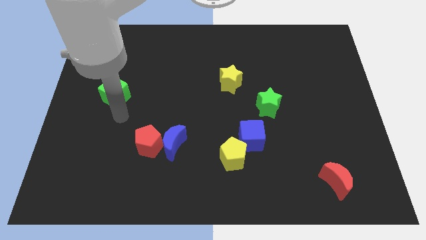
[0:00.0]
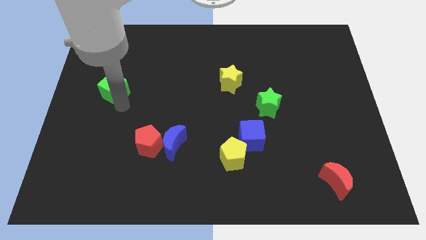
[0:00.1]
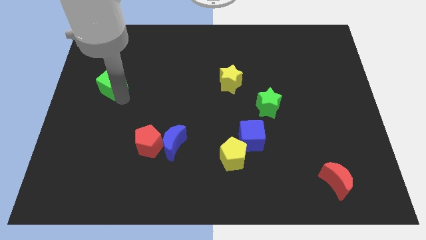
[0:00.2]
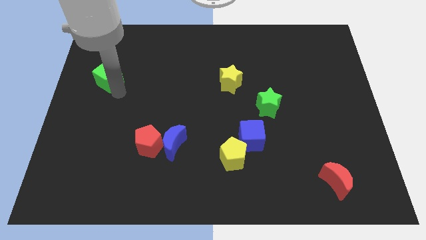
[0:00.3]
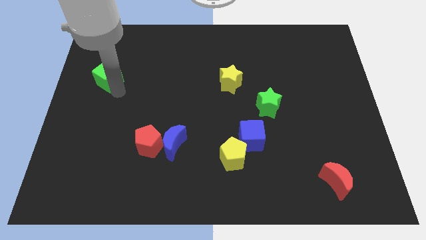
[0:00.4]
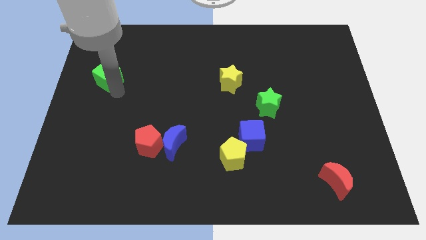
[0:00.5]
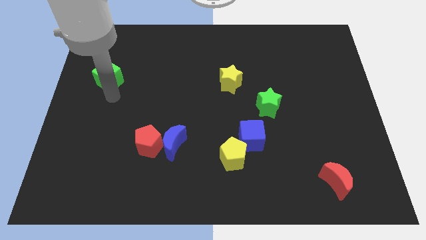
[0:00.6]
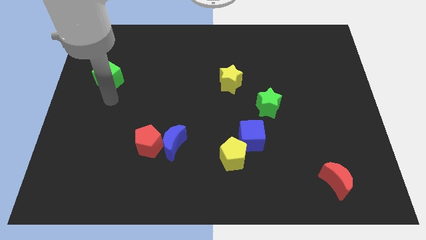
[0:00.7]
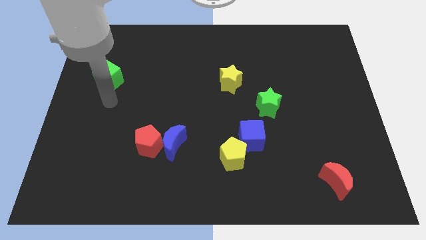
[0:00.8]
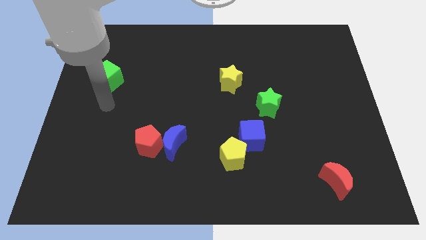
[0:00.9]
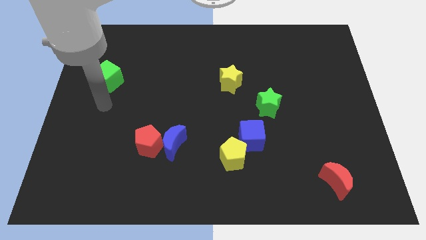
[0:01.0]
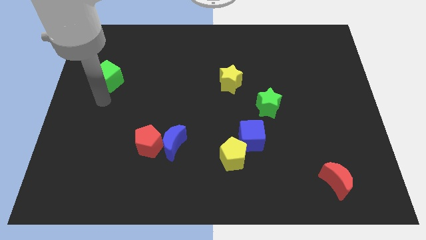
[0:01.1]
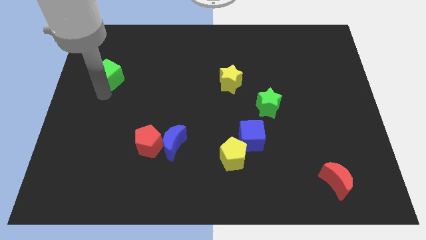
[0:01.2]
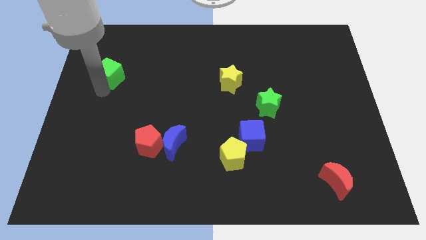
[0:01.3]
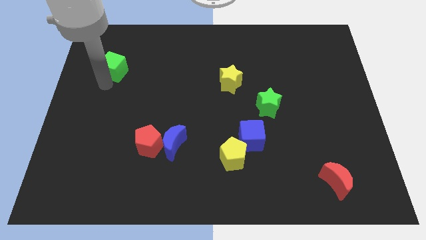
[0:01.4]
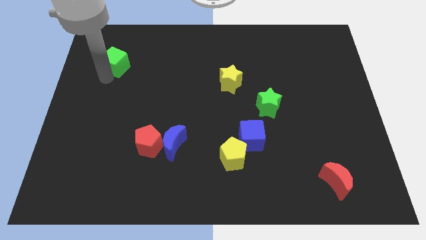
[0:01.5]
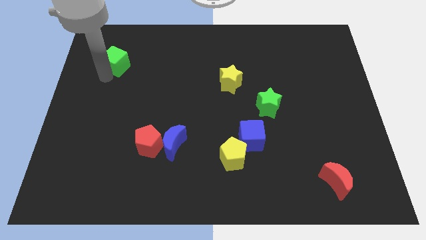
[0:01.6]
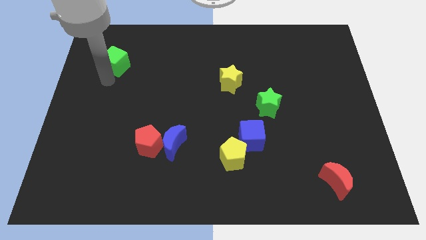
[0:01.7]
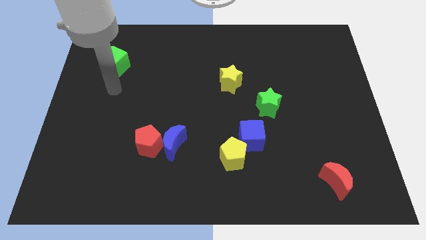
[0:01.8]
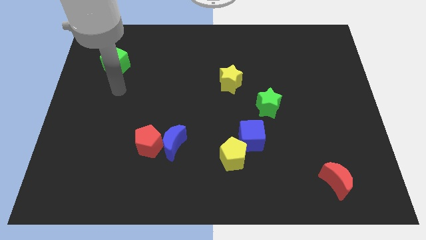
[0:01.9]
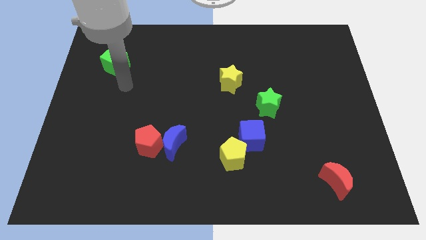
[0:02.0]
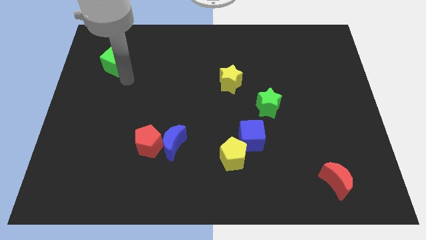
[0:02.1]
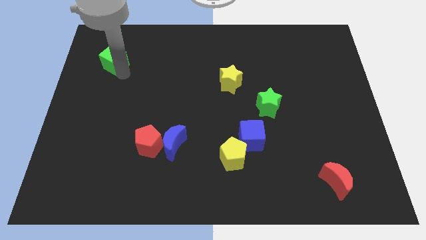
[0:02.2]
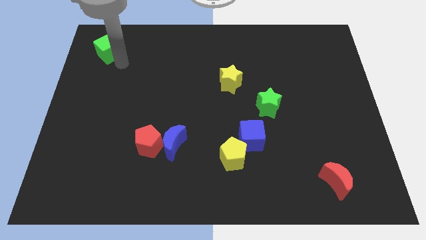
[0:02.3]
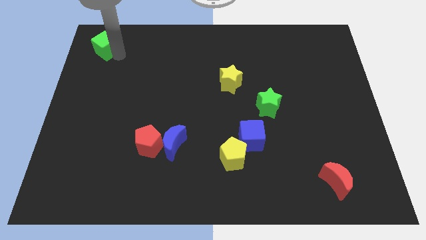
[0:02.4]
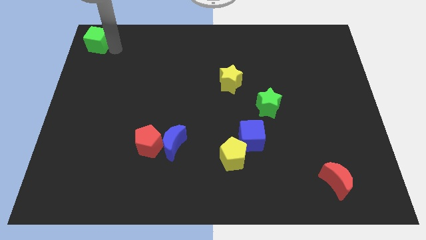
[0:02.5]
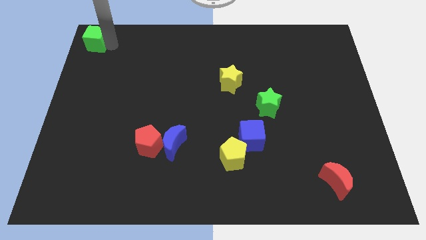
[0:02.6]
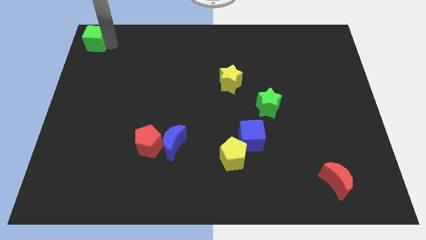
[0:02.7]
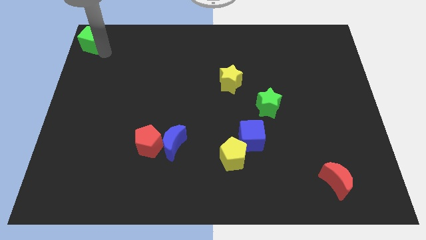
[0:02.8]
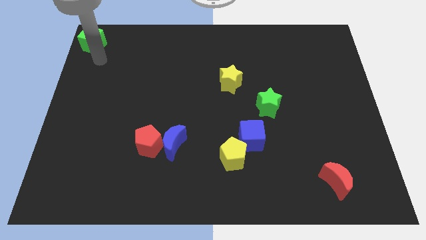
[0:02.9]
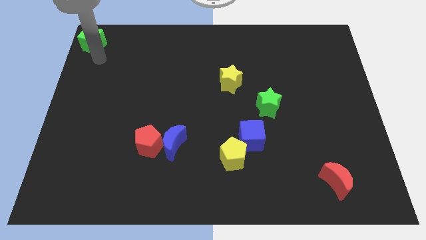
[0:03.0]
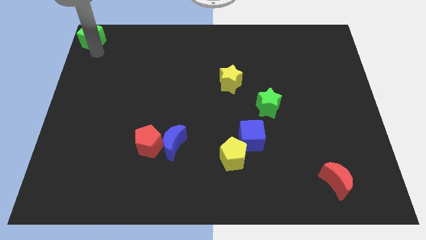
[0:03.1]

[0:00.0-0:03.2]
place the green cube to the top left corner of the board

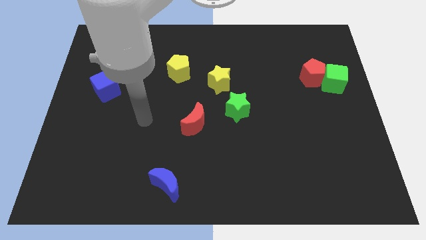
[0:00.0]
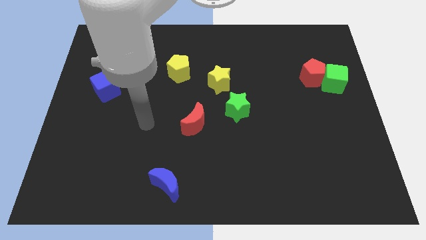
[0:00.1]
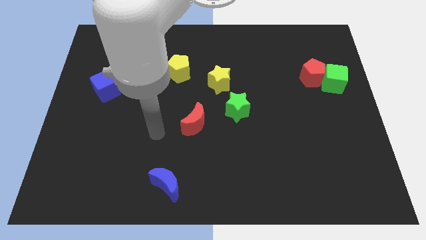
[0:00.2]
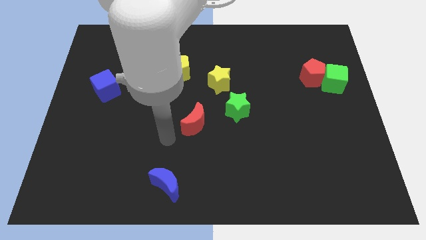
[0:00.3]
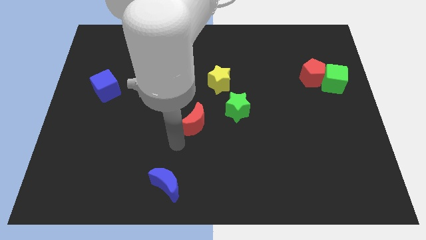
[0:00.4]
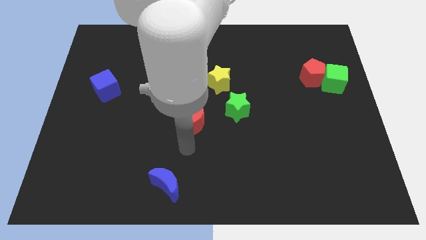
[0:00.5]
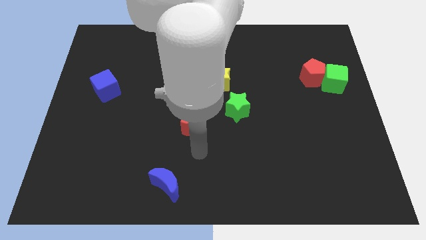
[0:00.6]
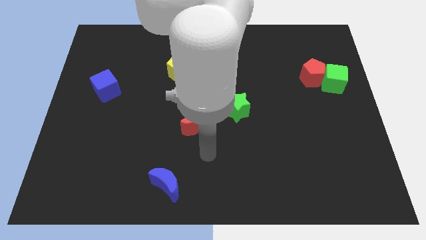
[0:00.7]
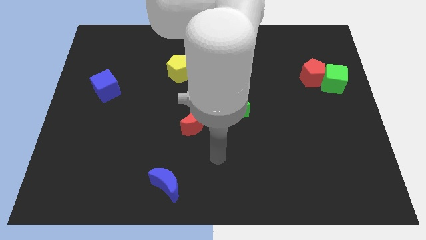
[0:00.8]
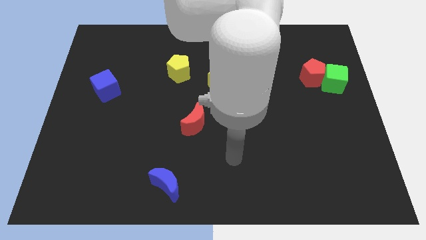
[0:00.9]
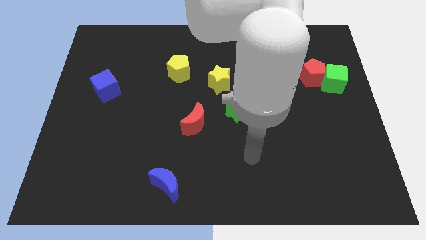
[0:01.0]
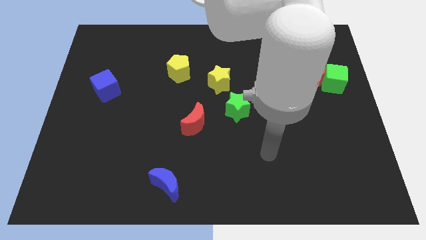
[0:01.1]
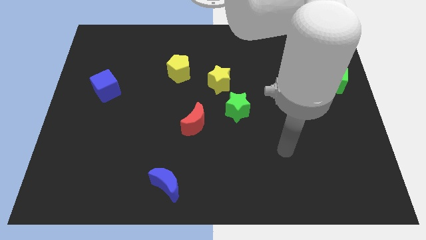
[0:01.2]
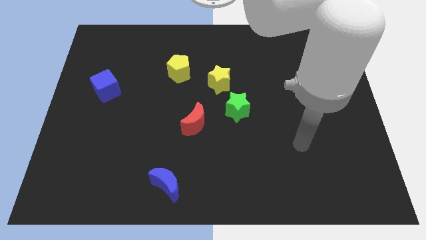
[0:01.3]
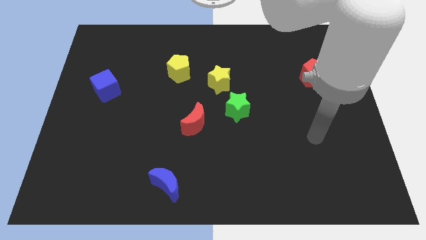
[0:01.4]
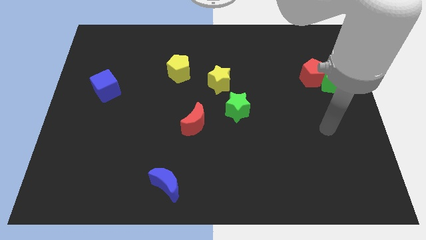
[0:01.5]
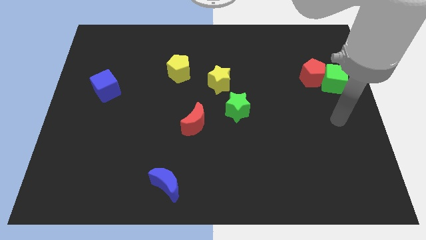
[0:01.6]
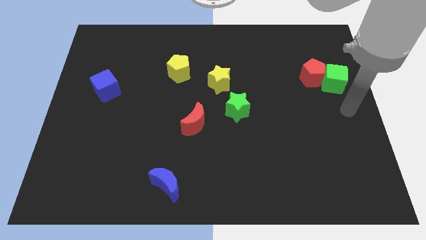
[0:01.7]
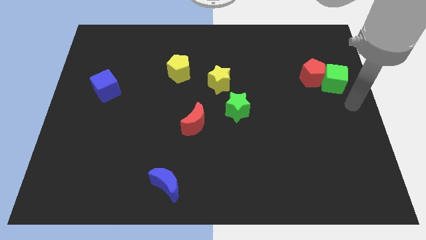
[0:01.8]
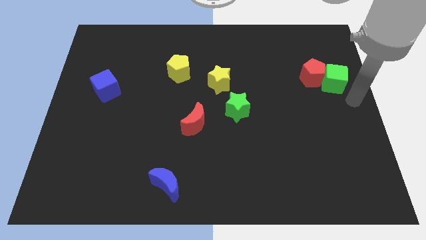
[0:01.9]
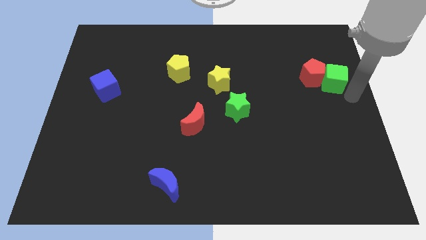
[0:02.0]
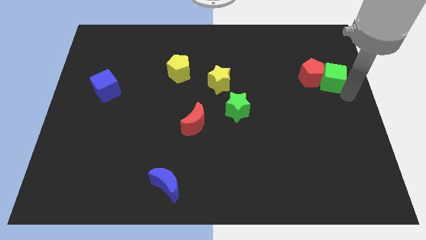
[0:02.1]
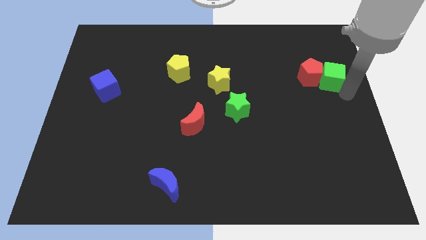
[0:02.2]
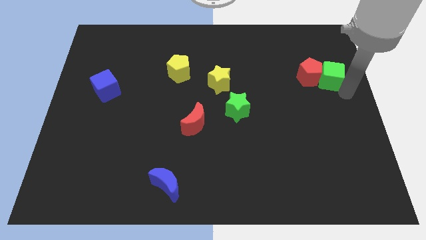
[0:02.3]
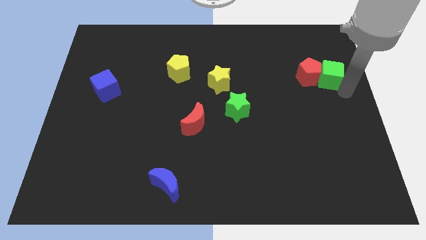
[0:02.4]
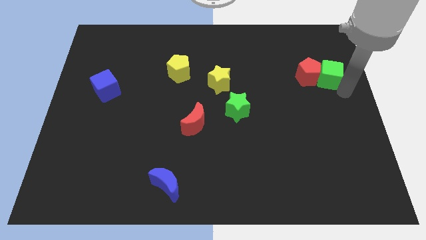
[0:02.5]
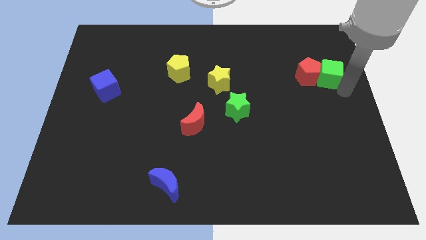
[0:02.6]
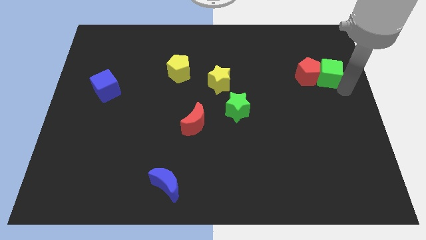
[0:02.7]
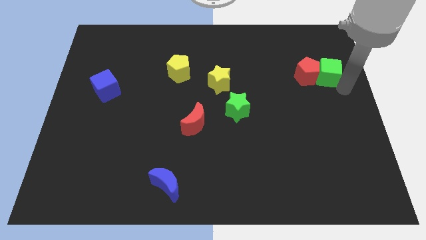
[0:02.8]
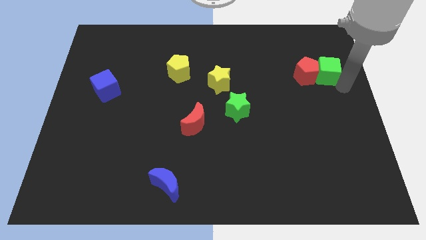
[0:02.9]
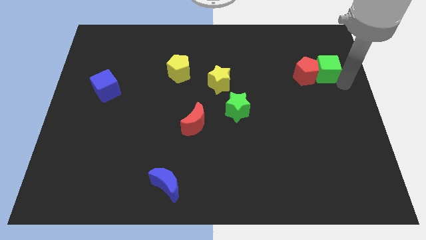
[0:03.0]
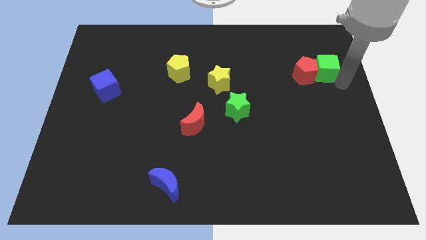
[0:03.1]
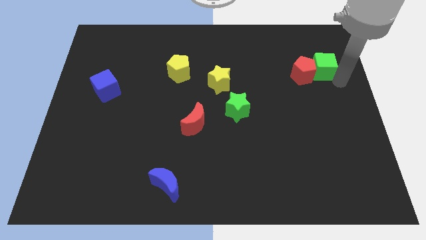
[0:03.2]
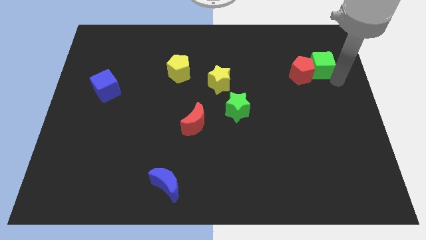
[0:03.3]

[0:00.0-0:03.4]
move the green cube and red pentagon slightly to the left side of the table

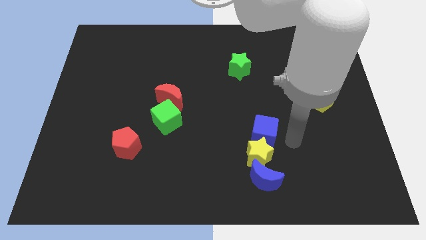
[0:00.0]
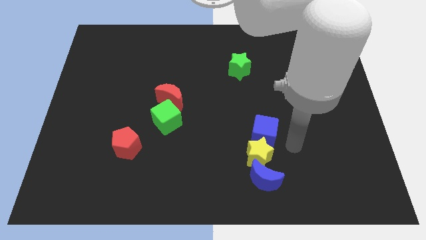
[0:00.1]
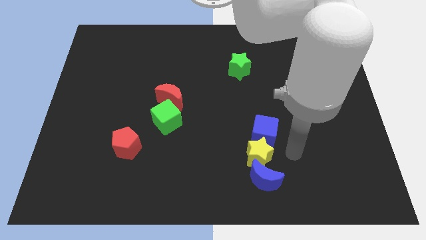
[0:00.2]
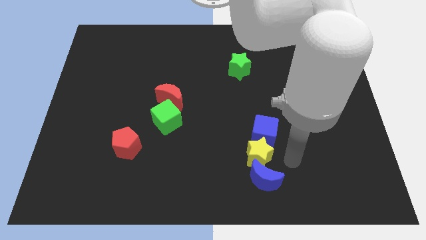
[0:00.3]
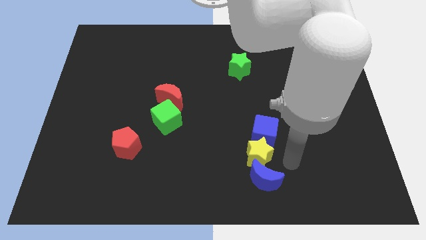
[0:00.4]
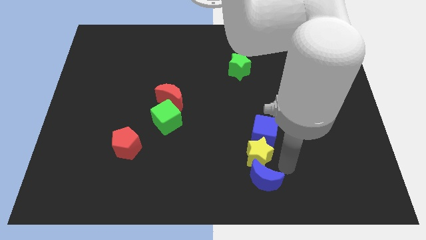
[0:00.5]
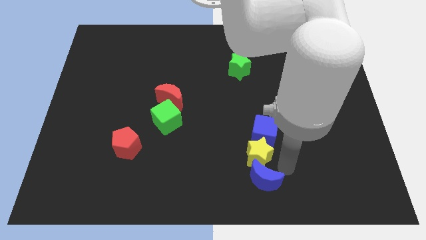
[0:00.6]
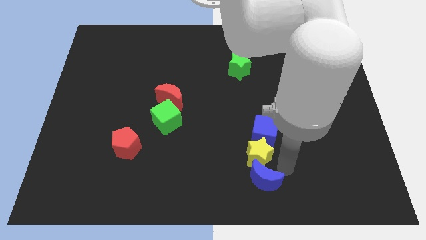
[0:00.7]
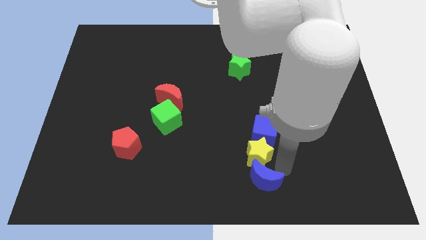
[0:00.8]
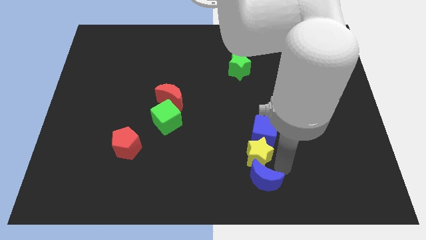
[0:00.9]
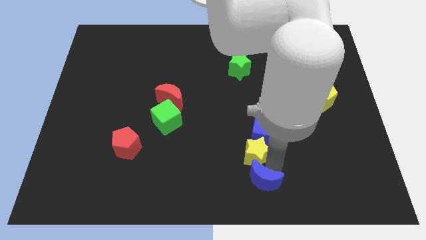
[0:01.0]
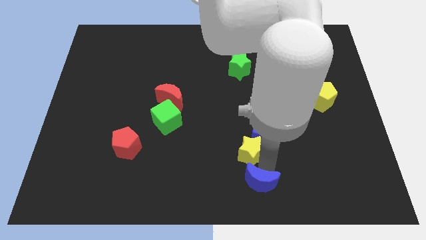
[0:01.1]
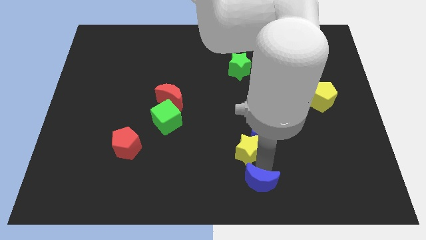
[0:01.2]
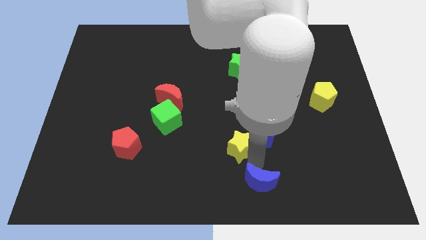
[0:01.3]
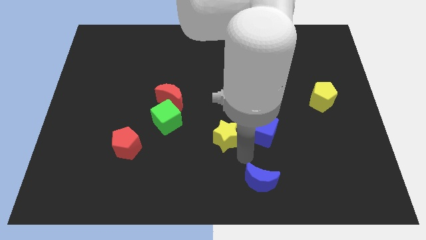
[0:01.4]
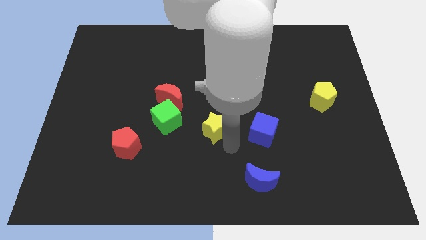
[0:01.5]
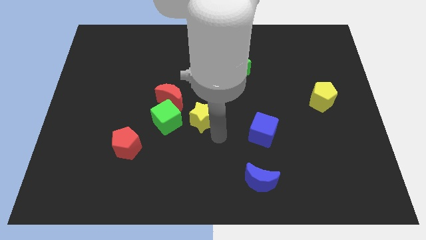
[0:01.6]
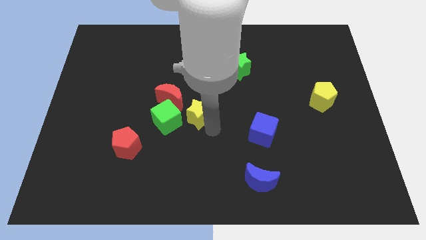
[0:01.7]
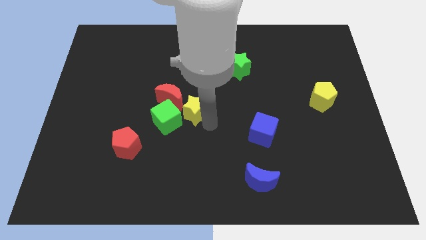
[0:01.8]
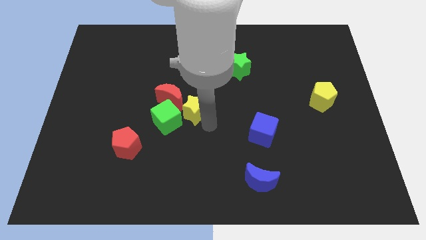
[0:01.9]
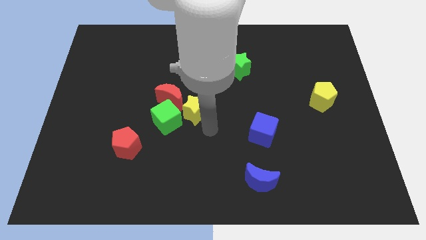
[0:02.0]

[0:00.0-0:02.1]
push the yellow star to the right side of the red crescent

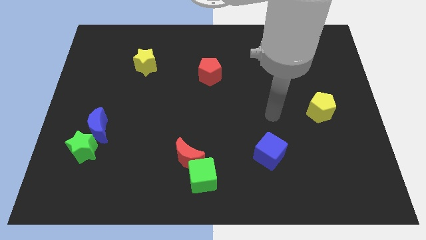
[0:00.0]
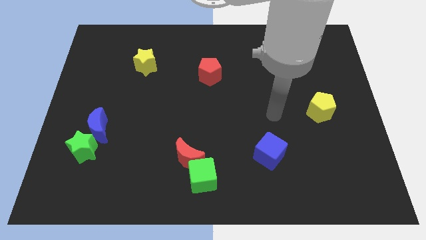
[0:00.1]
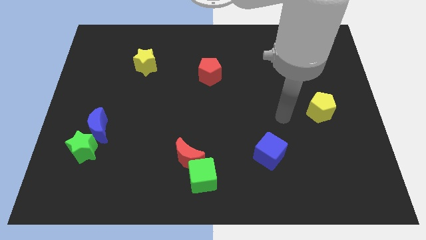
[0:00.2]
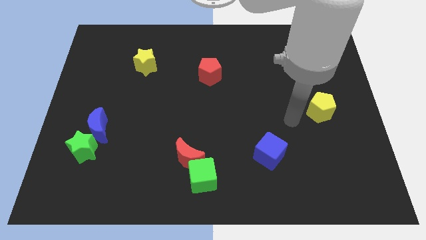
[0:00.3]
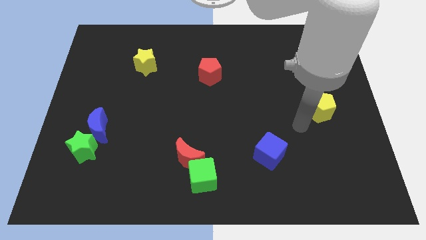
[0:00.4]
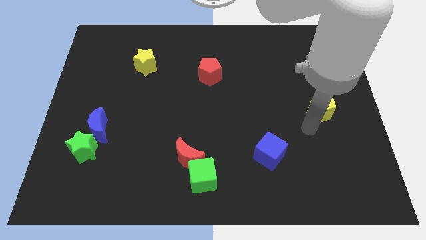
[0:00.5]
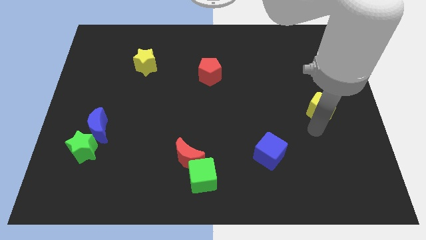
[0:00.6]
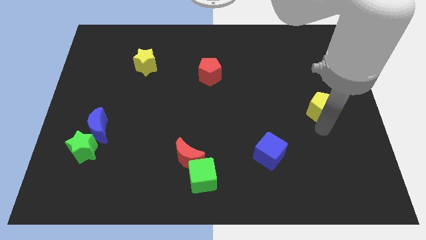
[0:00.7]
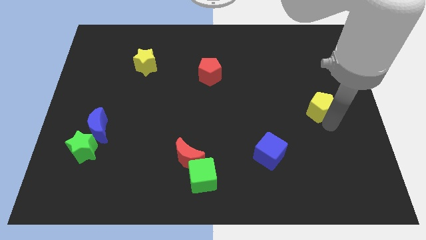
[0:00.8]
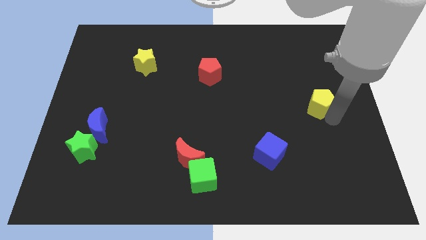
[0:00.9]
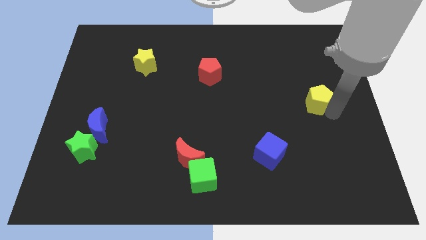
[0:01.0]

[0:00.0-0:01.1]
push the yellow pentagon slightly to the top
